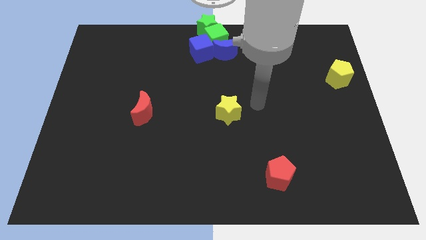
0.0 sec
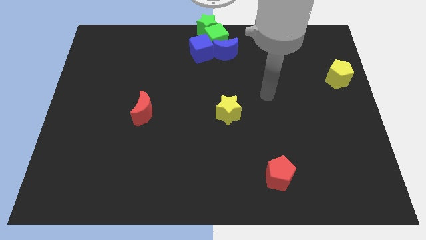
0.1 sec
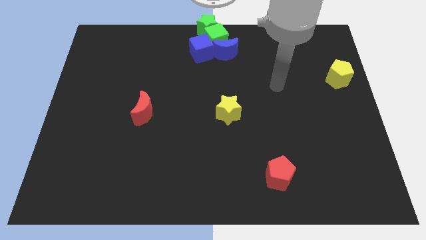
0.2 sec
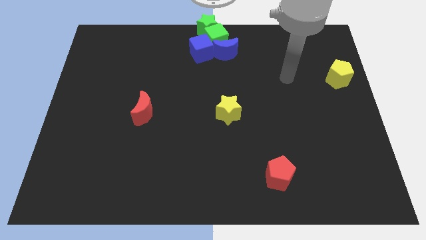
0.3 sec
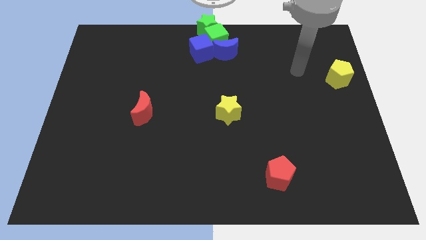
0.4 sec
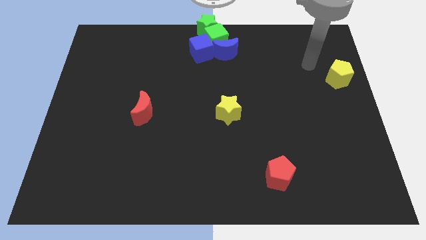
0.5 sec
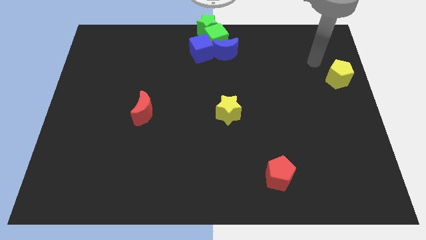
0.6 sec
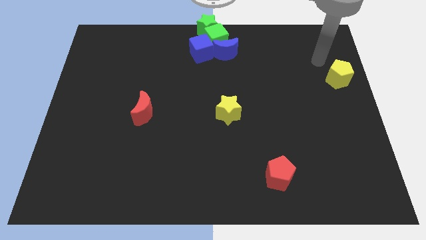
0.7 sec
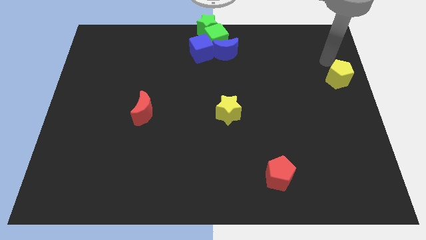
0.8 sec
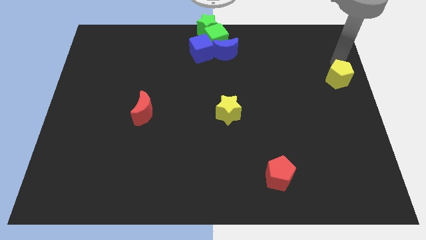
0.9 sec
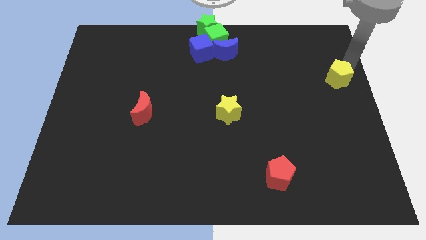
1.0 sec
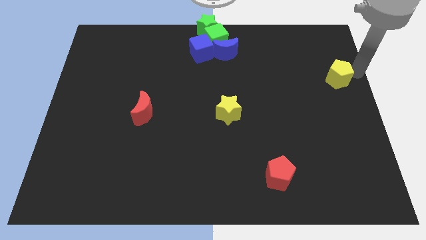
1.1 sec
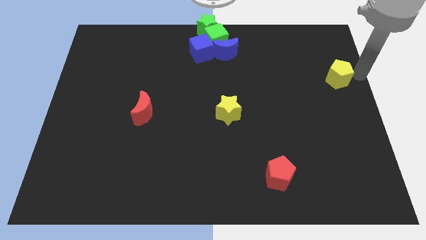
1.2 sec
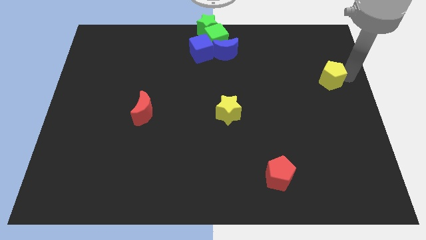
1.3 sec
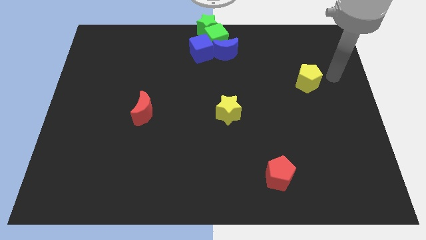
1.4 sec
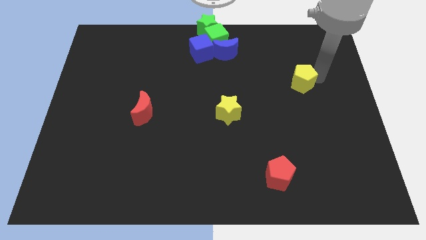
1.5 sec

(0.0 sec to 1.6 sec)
push the yellow pentagon towards the yellow star

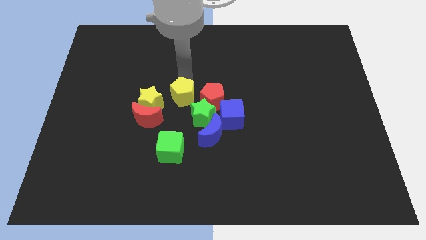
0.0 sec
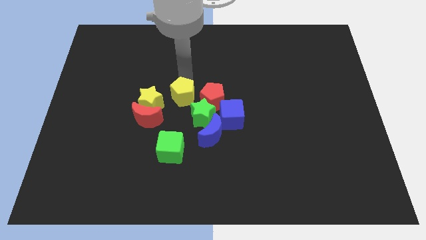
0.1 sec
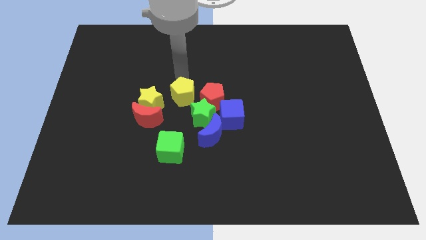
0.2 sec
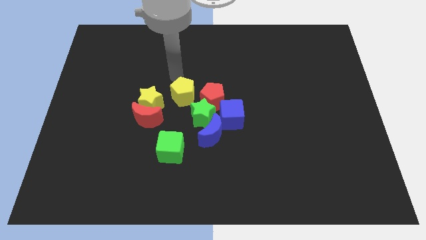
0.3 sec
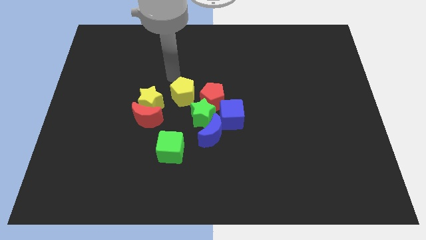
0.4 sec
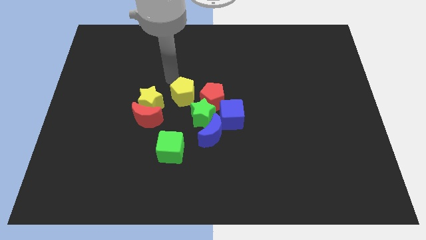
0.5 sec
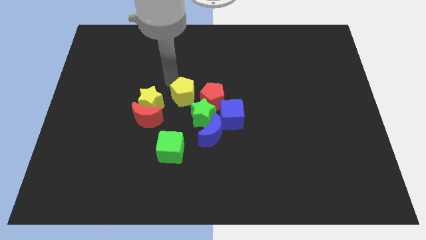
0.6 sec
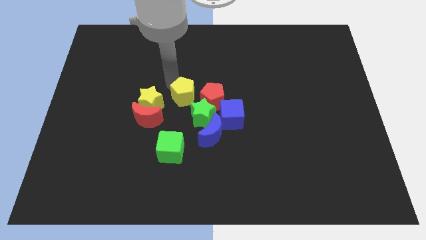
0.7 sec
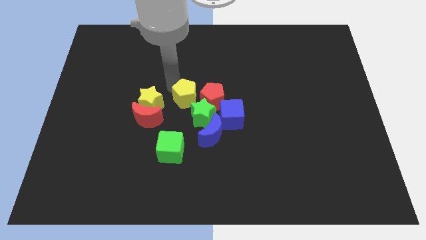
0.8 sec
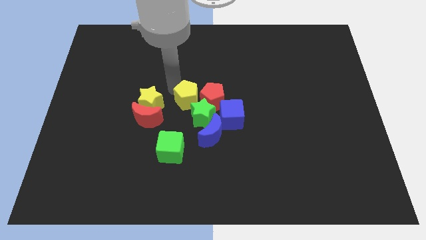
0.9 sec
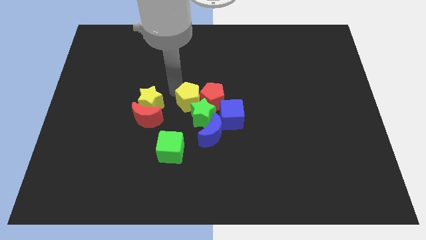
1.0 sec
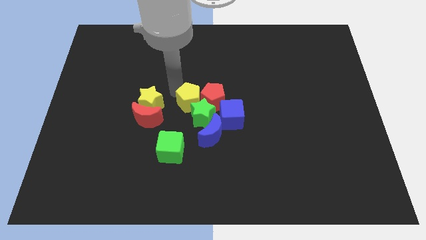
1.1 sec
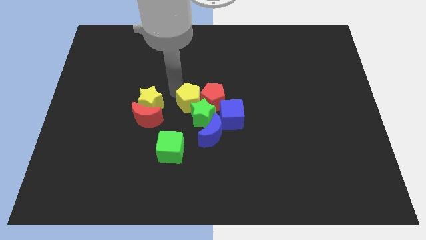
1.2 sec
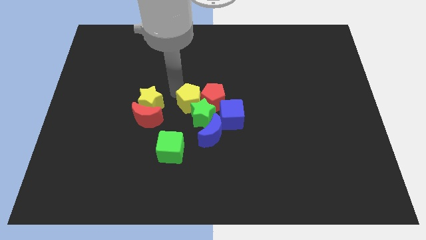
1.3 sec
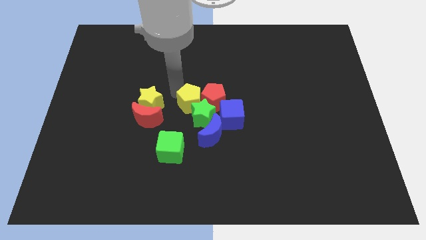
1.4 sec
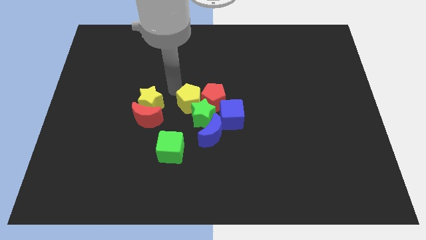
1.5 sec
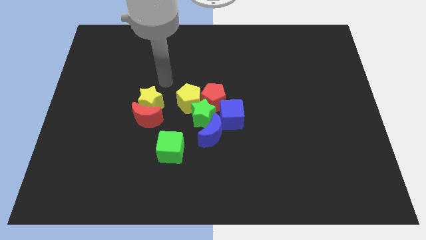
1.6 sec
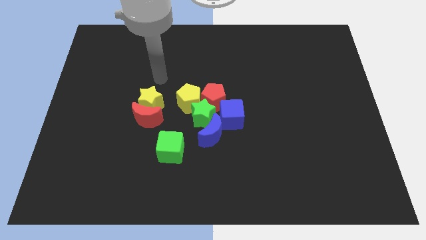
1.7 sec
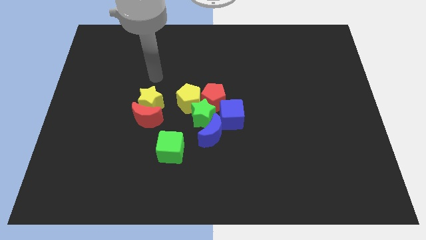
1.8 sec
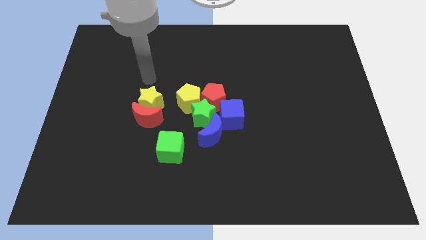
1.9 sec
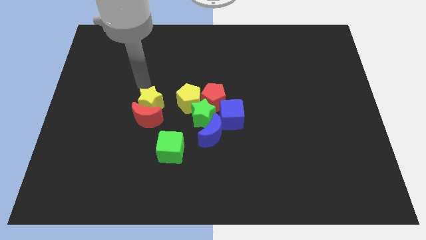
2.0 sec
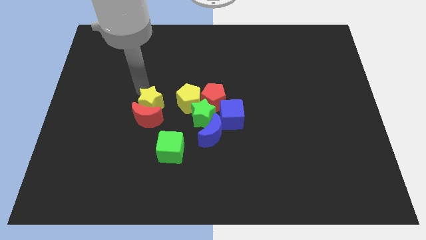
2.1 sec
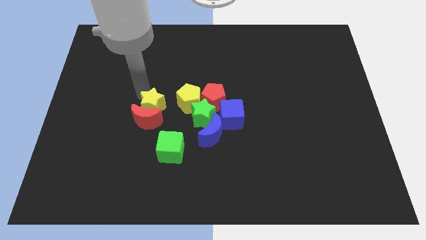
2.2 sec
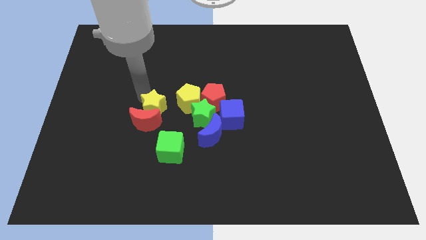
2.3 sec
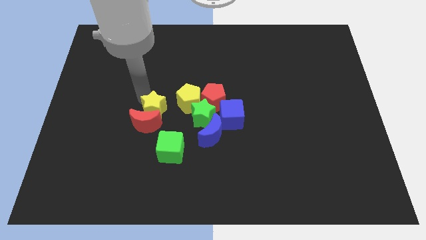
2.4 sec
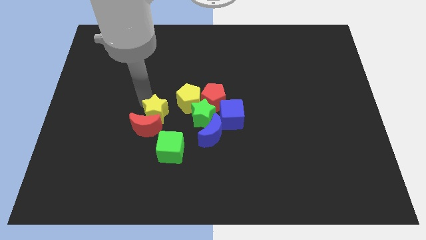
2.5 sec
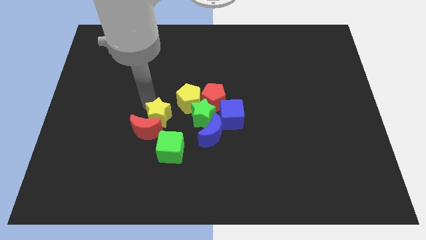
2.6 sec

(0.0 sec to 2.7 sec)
push the yellow pentagon into the green star and push the yellow star

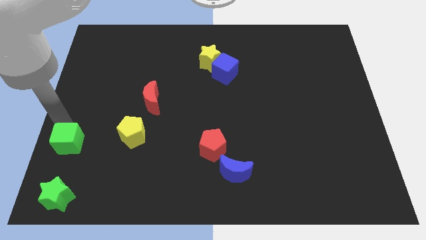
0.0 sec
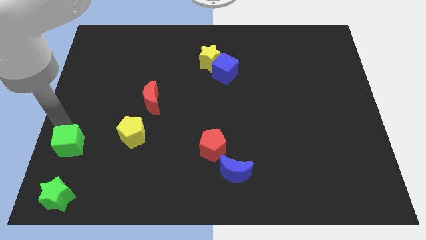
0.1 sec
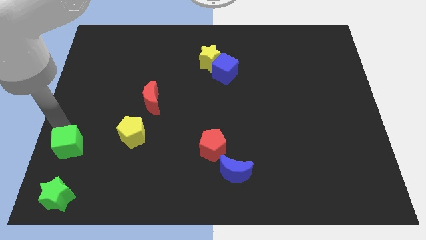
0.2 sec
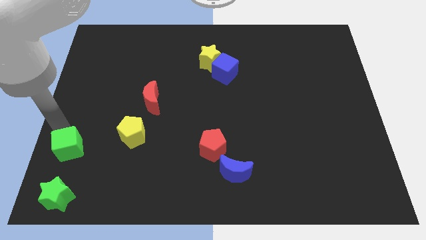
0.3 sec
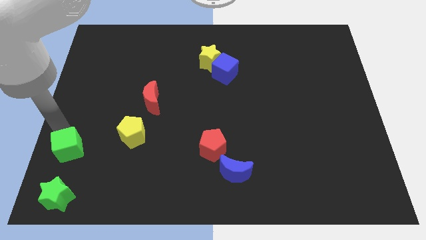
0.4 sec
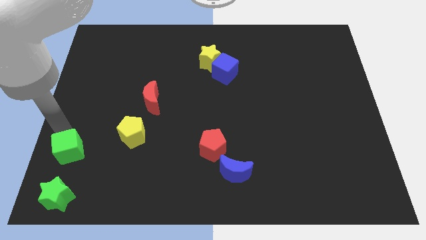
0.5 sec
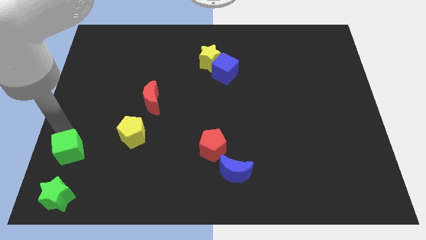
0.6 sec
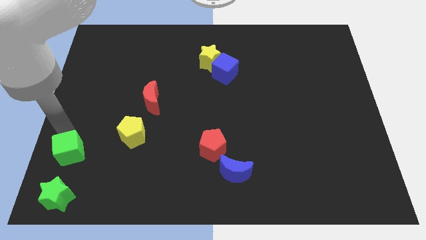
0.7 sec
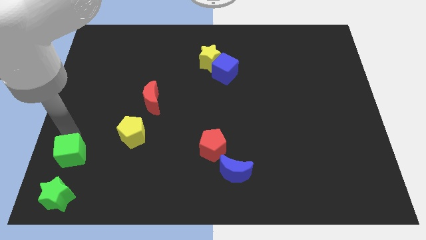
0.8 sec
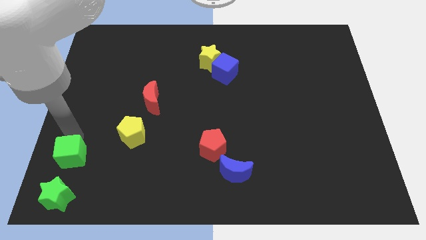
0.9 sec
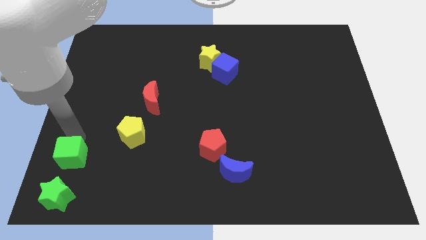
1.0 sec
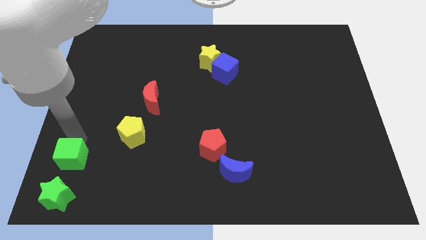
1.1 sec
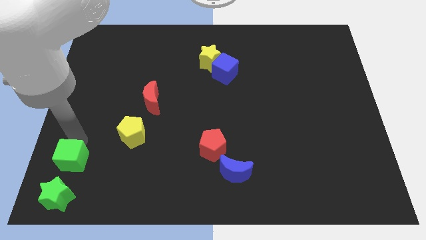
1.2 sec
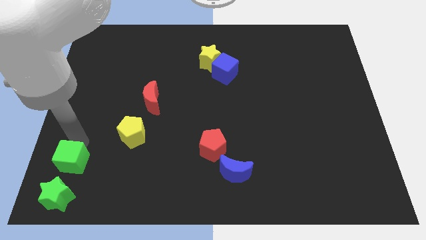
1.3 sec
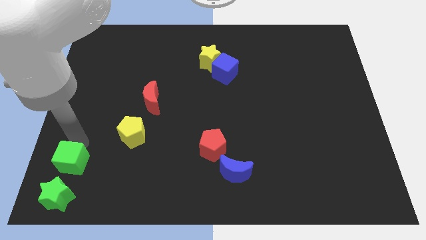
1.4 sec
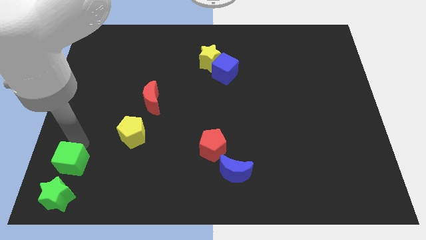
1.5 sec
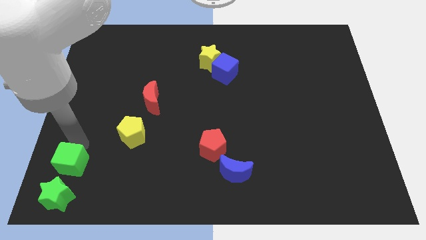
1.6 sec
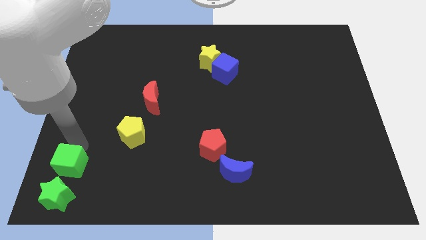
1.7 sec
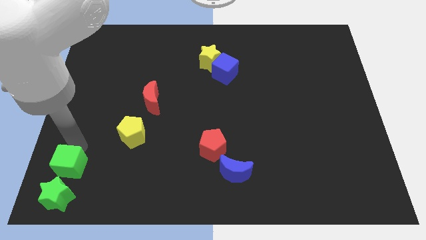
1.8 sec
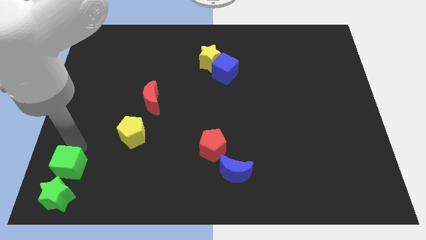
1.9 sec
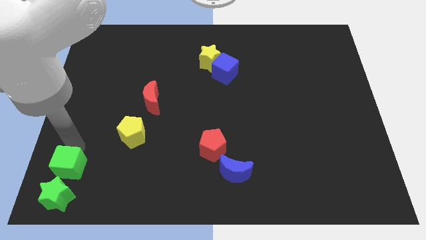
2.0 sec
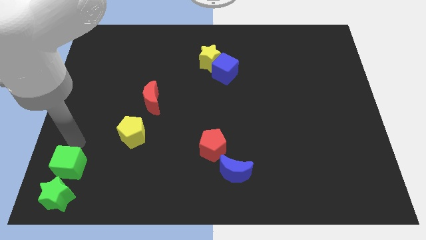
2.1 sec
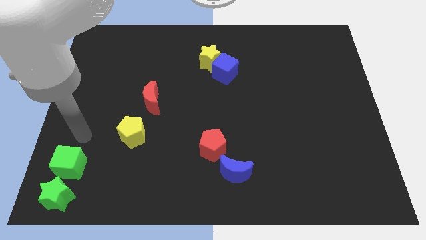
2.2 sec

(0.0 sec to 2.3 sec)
push the green cube close to the green star

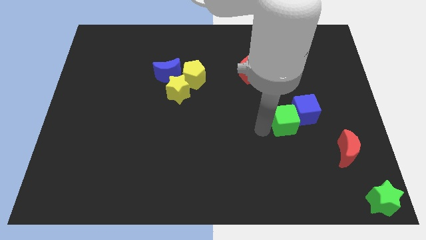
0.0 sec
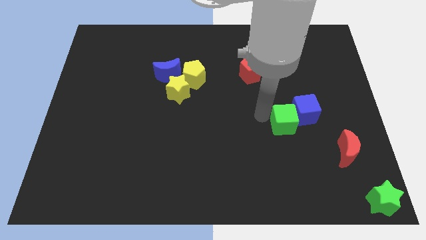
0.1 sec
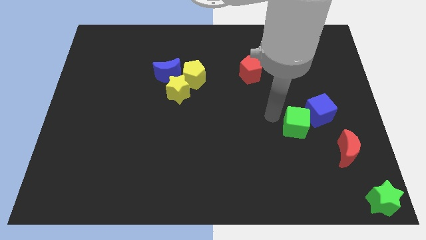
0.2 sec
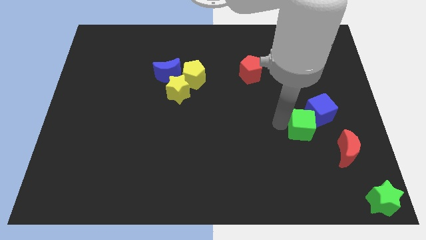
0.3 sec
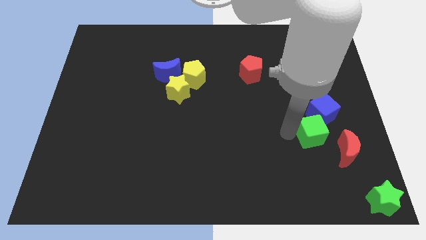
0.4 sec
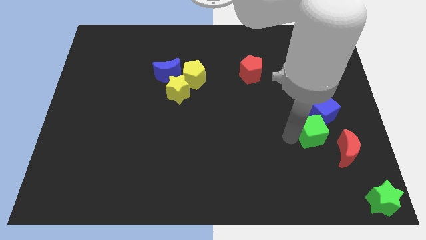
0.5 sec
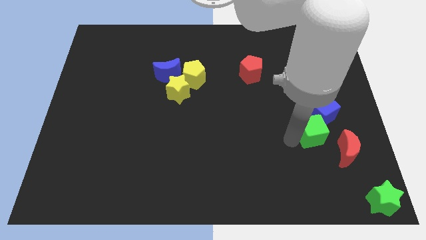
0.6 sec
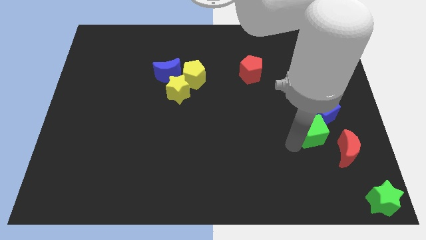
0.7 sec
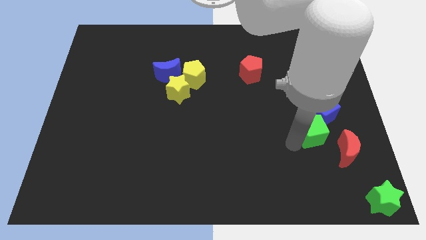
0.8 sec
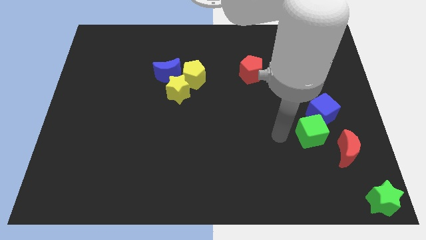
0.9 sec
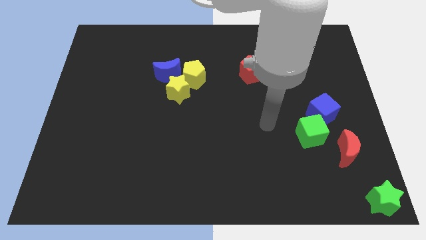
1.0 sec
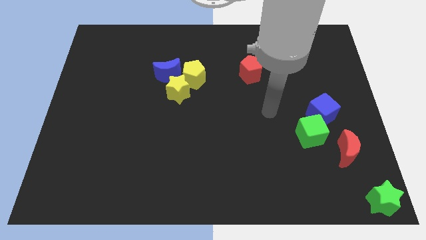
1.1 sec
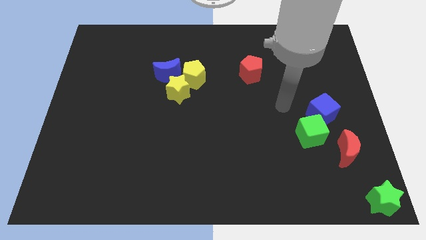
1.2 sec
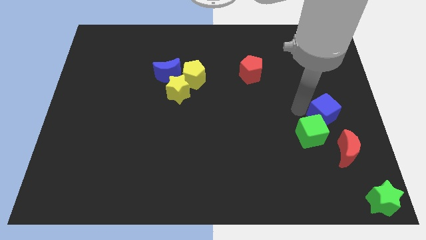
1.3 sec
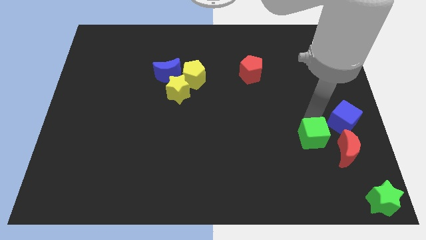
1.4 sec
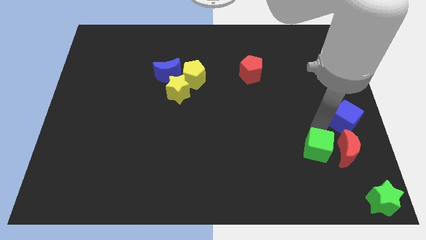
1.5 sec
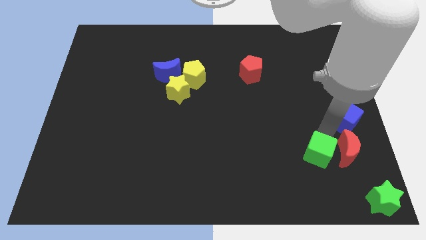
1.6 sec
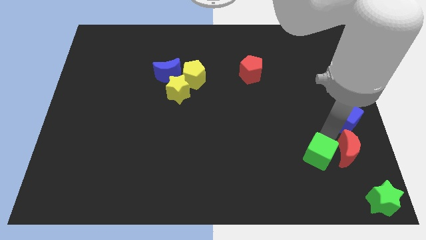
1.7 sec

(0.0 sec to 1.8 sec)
place the green cube left to the red moon

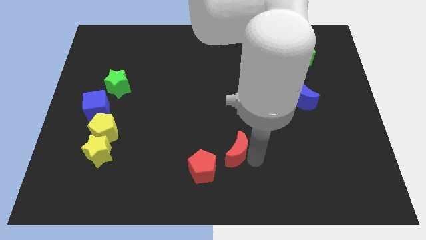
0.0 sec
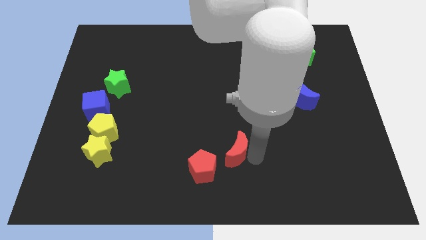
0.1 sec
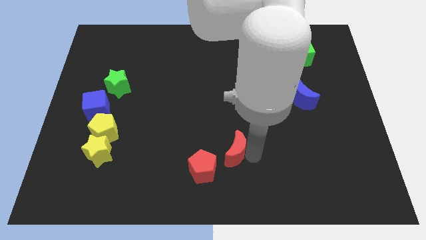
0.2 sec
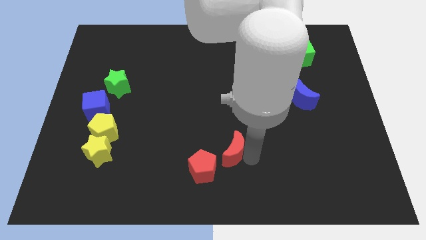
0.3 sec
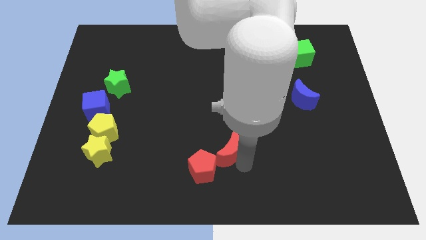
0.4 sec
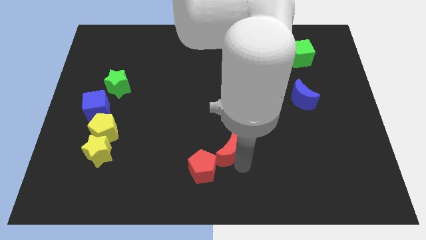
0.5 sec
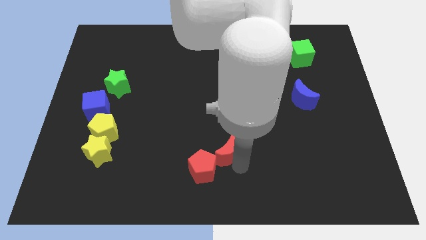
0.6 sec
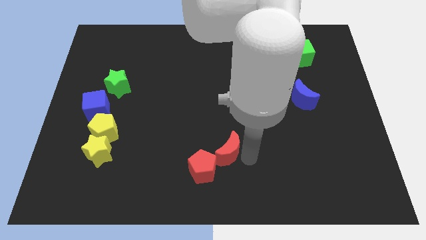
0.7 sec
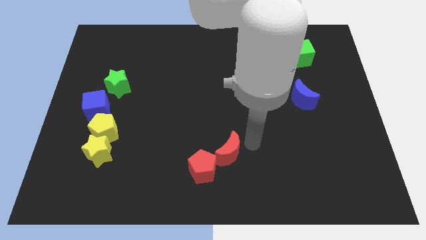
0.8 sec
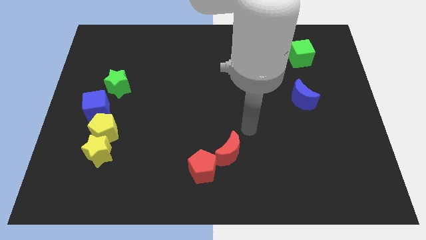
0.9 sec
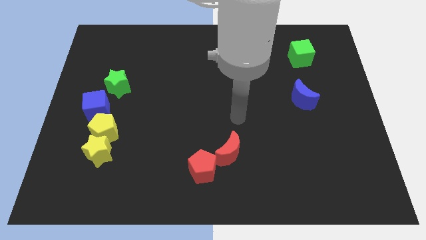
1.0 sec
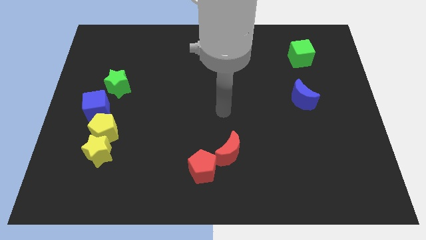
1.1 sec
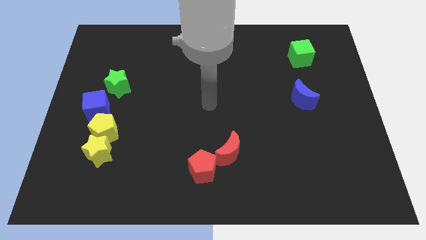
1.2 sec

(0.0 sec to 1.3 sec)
make the red crescent touch the top right of the red pentagon
